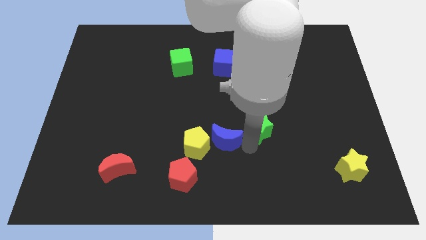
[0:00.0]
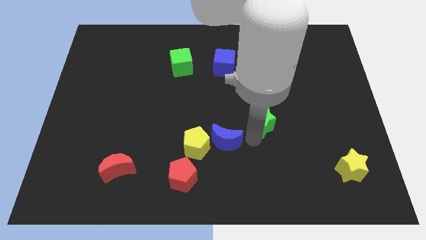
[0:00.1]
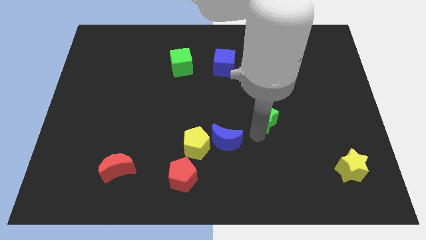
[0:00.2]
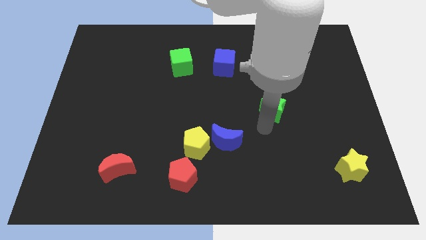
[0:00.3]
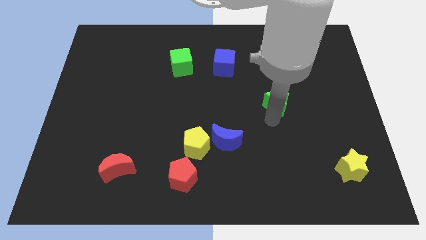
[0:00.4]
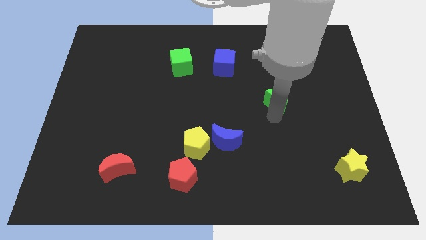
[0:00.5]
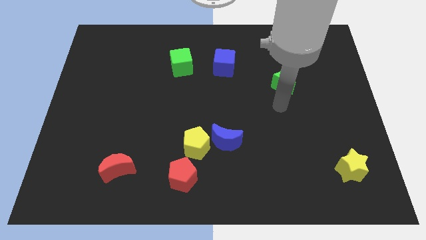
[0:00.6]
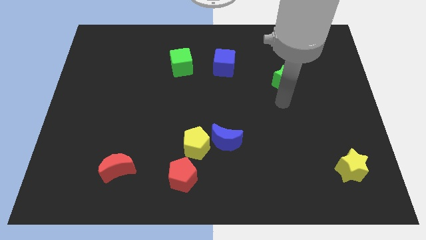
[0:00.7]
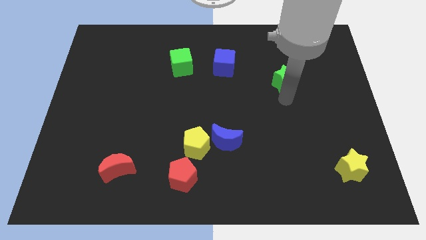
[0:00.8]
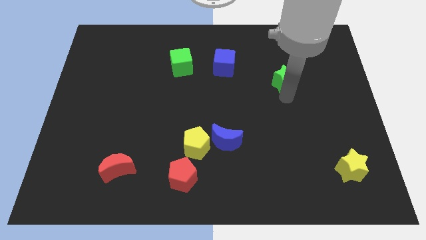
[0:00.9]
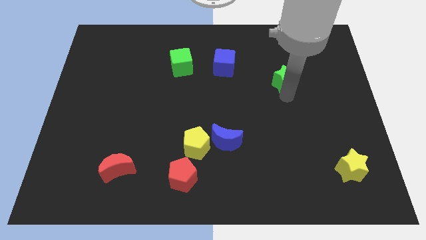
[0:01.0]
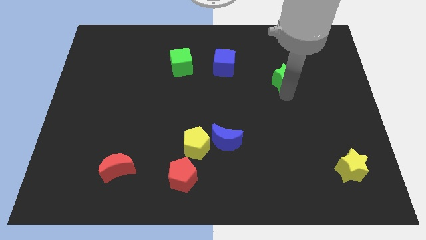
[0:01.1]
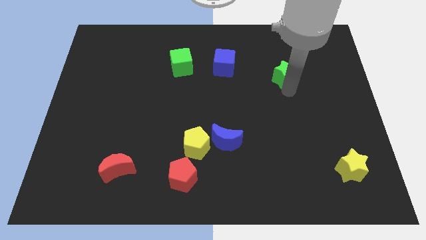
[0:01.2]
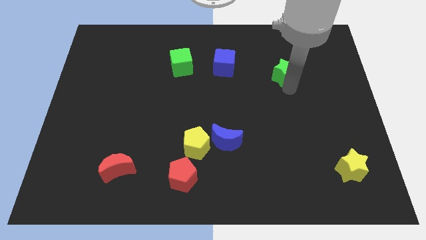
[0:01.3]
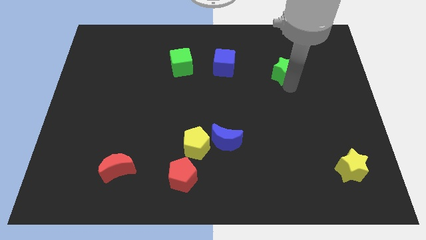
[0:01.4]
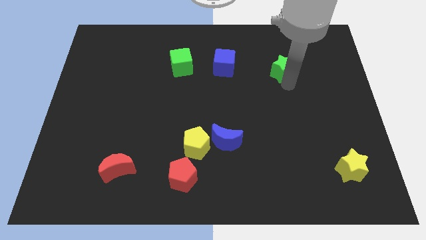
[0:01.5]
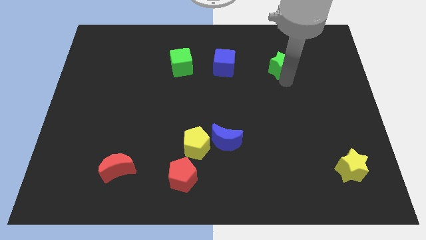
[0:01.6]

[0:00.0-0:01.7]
place green star beside blue cube

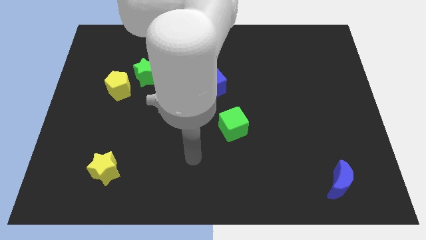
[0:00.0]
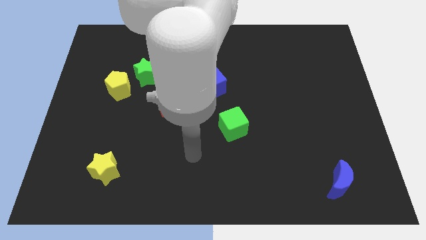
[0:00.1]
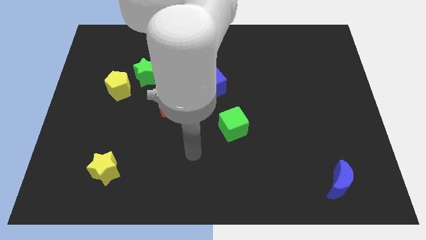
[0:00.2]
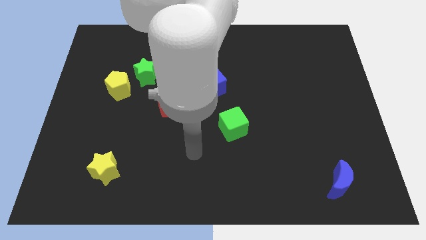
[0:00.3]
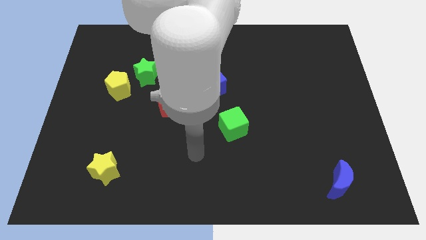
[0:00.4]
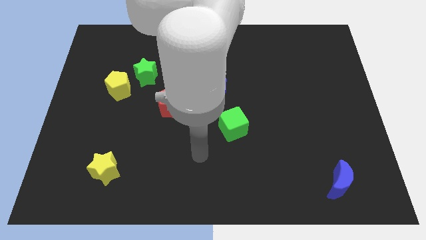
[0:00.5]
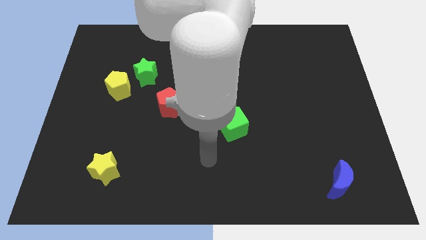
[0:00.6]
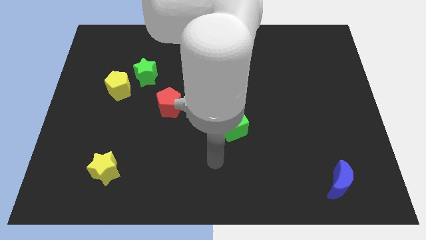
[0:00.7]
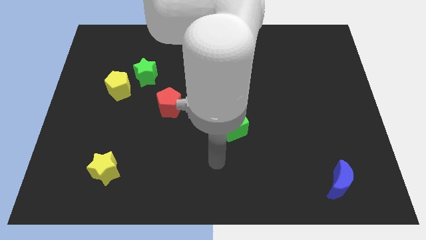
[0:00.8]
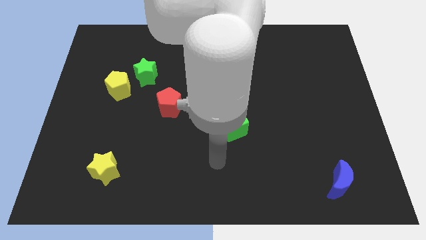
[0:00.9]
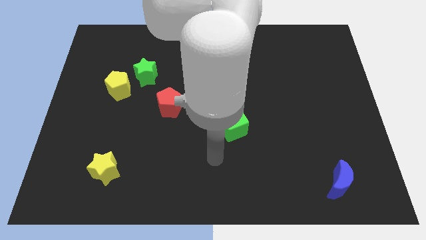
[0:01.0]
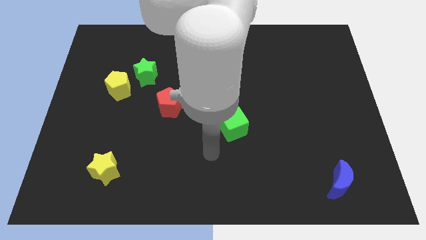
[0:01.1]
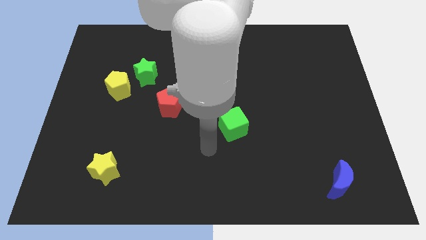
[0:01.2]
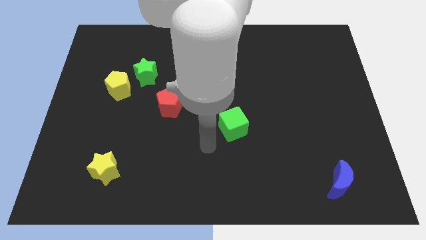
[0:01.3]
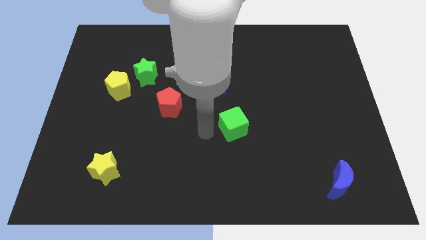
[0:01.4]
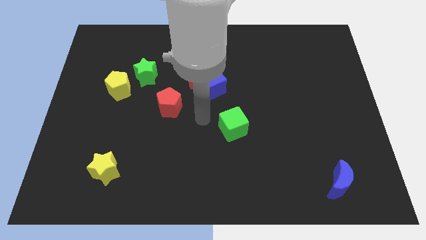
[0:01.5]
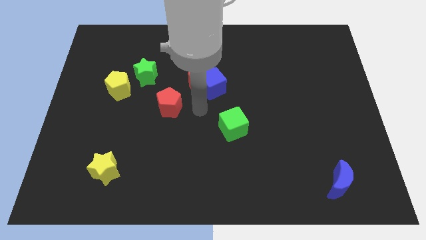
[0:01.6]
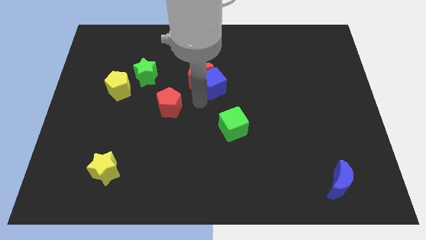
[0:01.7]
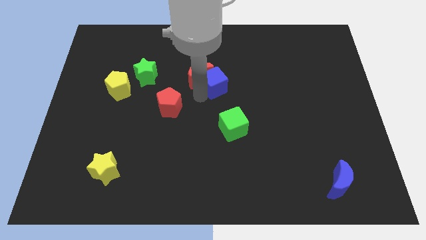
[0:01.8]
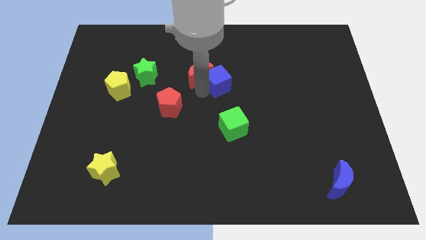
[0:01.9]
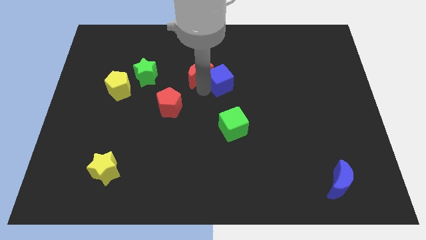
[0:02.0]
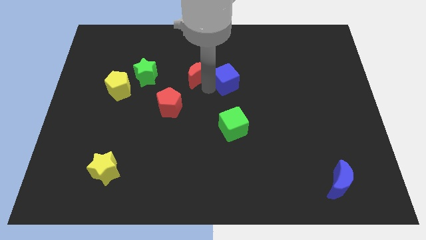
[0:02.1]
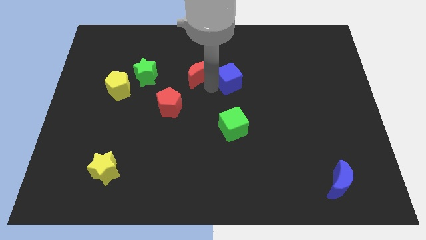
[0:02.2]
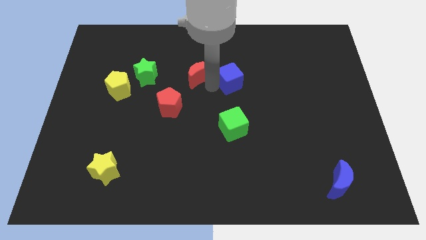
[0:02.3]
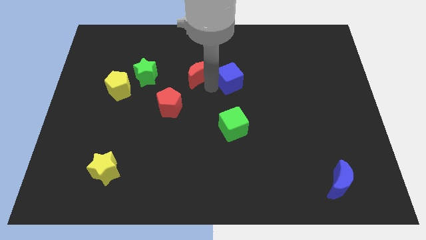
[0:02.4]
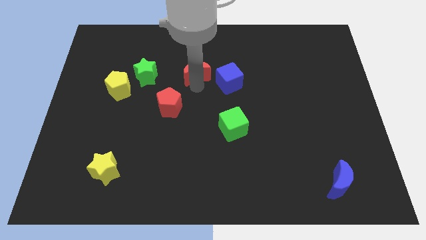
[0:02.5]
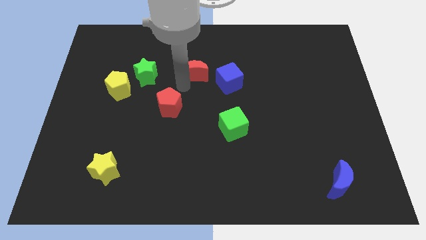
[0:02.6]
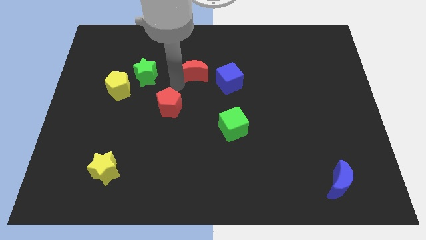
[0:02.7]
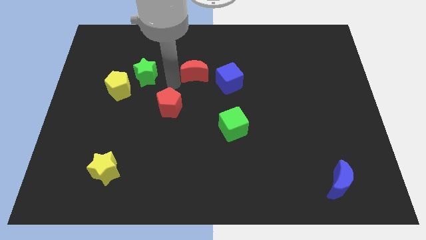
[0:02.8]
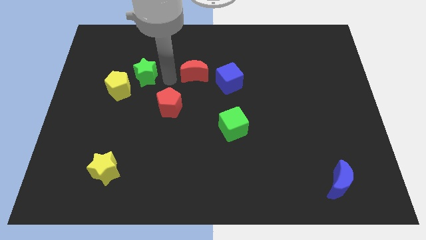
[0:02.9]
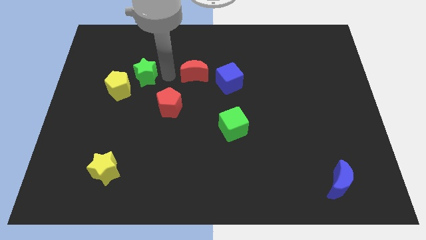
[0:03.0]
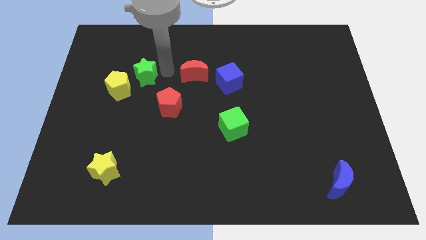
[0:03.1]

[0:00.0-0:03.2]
push the blue cube slightly to the right

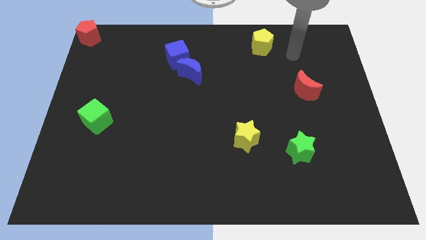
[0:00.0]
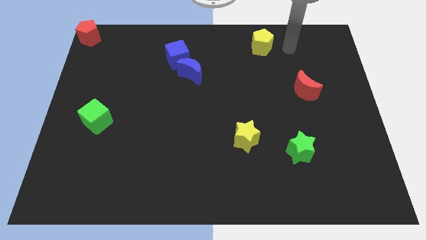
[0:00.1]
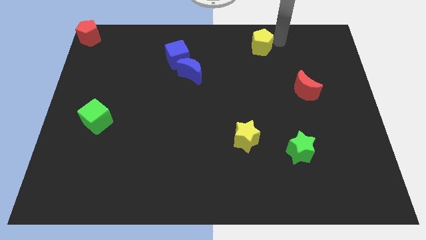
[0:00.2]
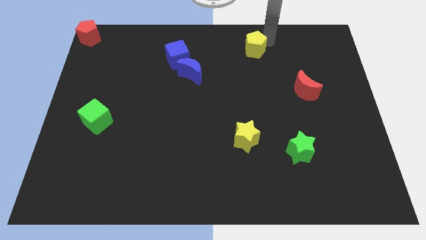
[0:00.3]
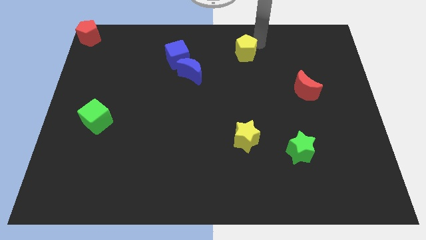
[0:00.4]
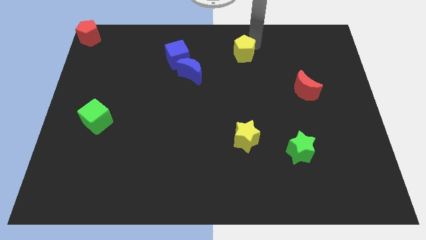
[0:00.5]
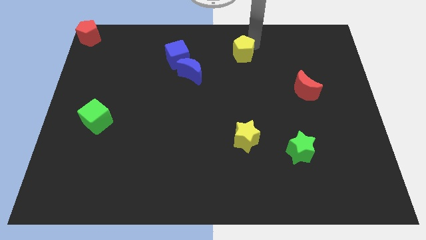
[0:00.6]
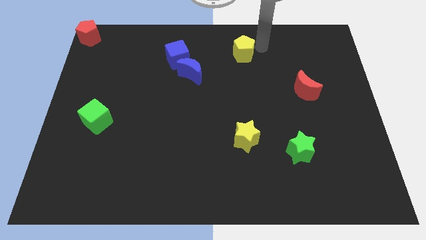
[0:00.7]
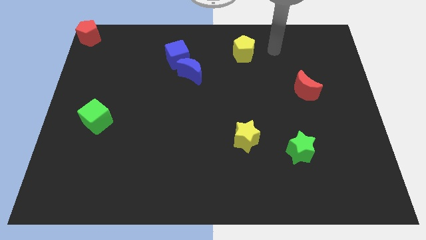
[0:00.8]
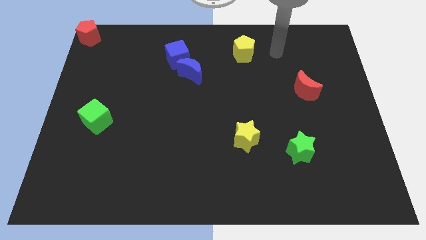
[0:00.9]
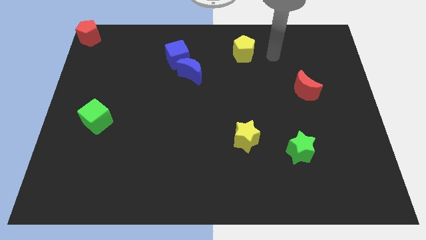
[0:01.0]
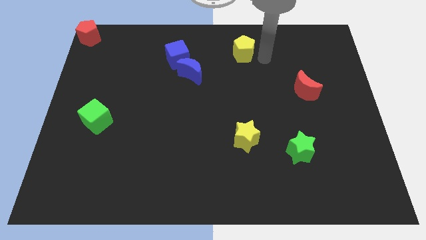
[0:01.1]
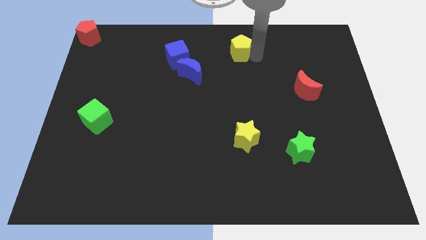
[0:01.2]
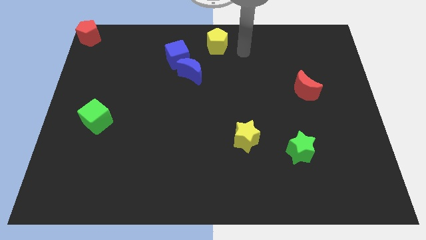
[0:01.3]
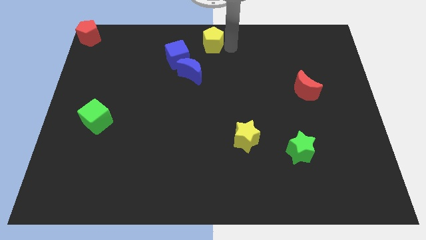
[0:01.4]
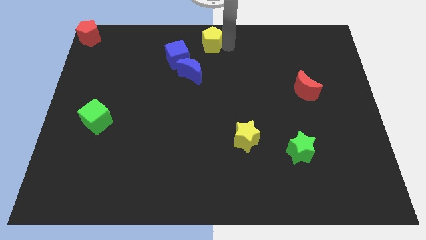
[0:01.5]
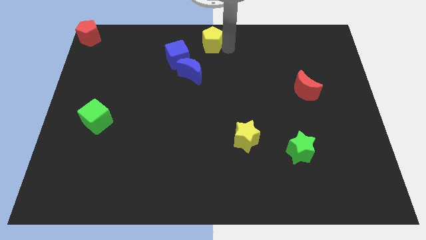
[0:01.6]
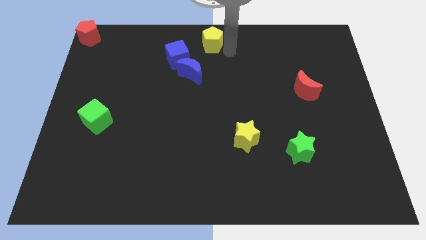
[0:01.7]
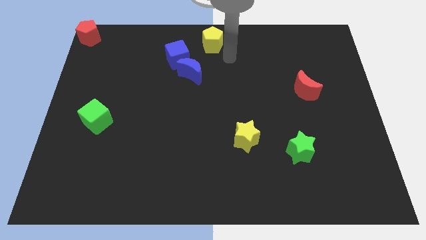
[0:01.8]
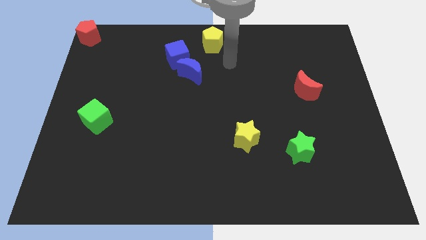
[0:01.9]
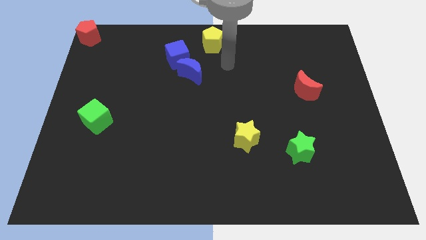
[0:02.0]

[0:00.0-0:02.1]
push the yellow pentagon to the top center of the board

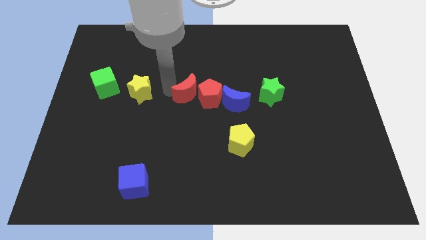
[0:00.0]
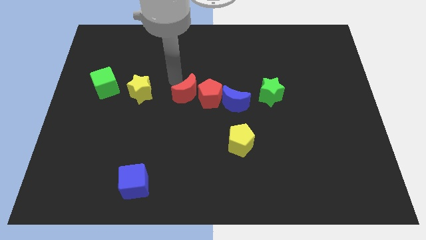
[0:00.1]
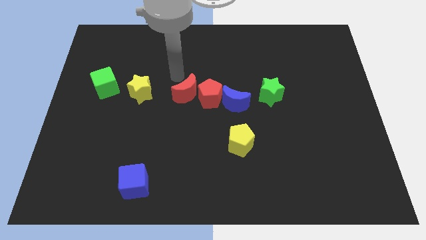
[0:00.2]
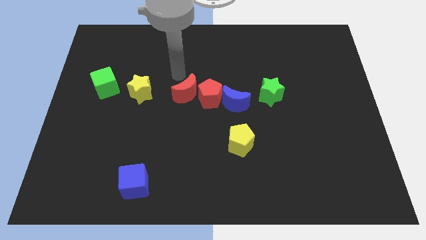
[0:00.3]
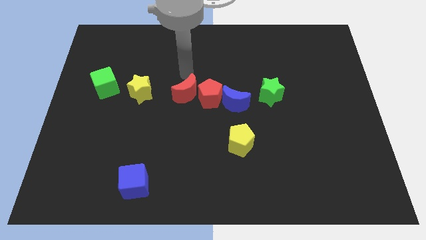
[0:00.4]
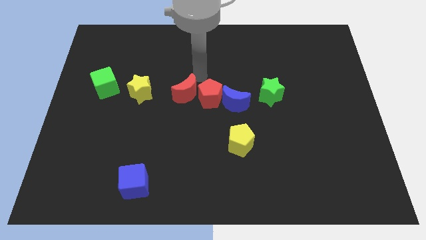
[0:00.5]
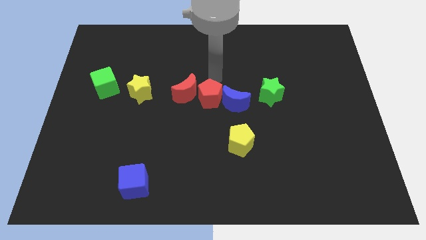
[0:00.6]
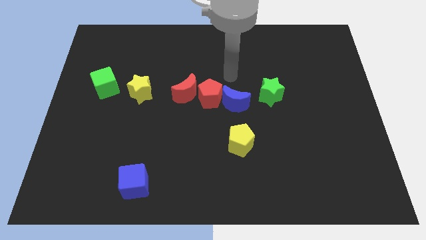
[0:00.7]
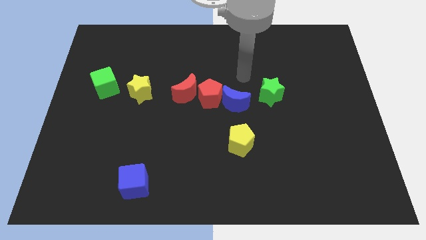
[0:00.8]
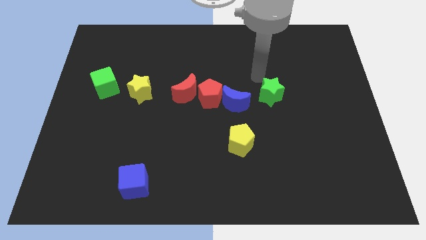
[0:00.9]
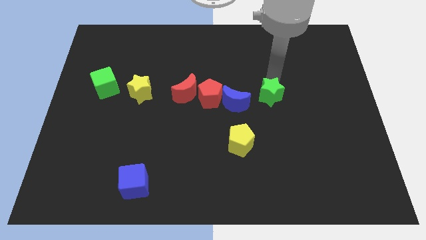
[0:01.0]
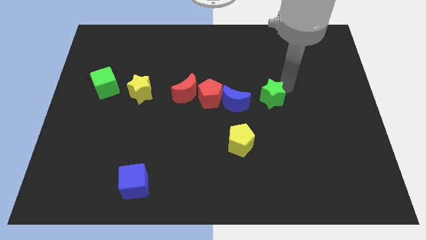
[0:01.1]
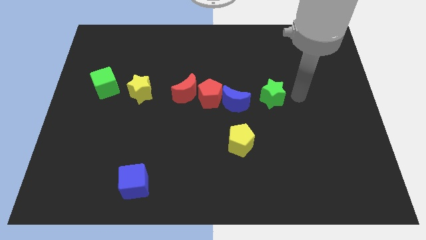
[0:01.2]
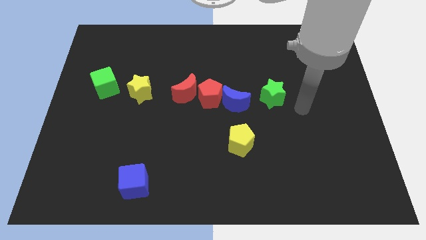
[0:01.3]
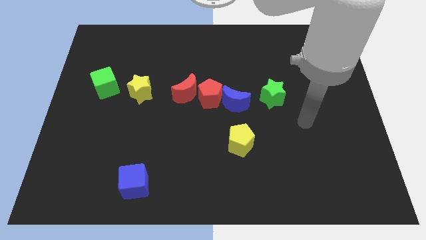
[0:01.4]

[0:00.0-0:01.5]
place your arm to the bottom right of the green star

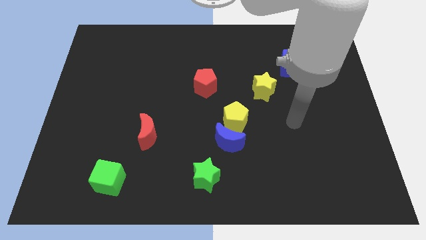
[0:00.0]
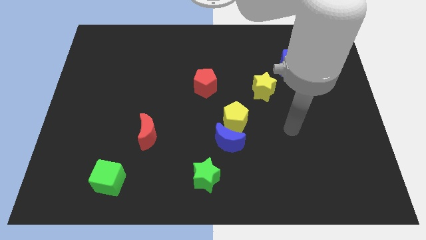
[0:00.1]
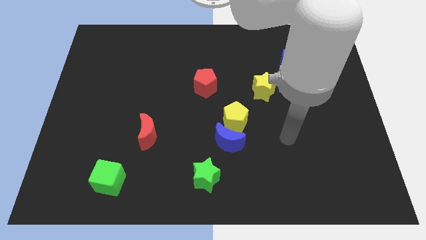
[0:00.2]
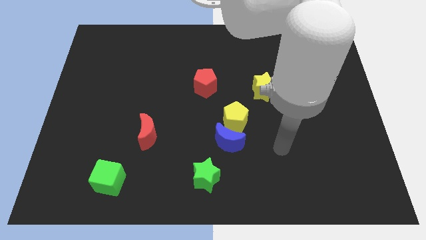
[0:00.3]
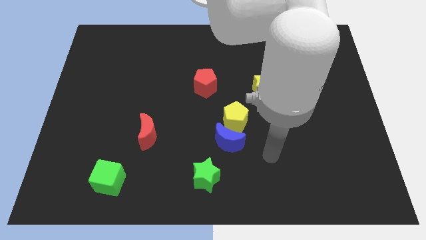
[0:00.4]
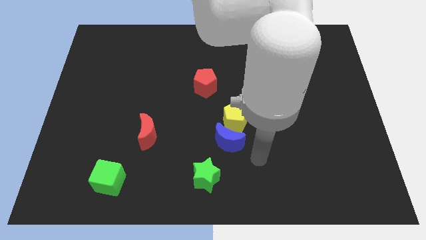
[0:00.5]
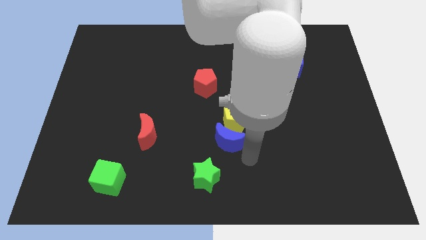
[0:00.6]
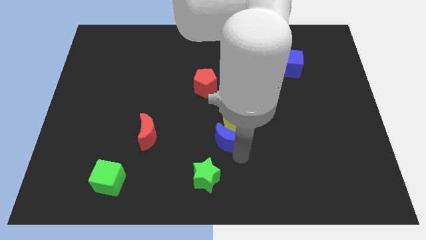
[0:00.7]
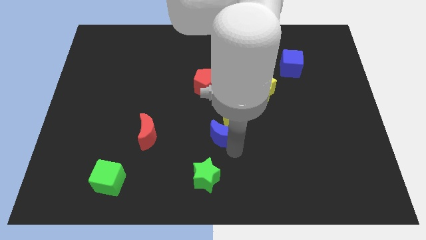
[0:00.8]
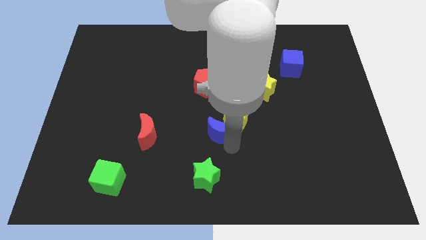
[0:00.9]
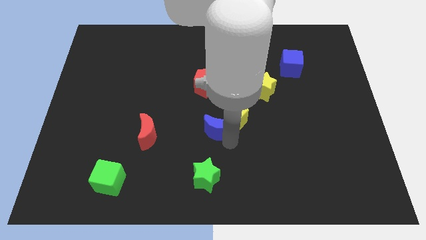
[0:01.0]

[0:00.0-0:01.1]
touch the bottom of blue moon
